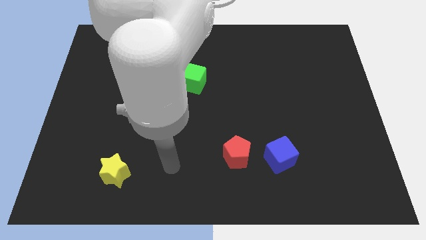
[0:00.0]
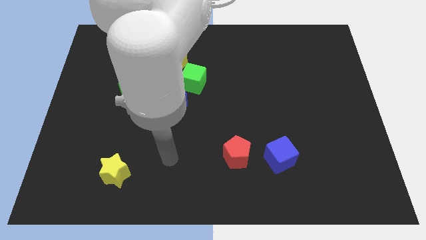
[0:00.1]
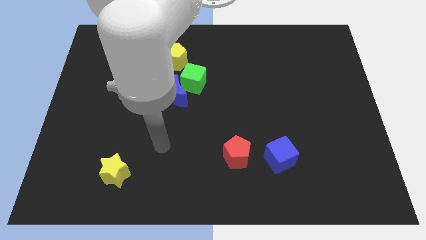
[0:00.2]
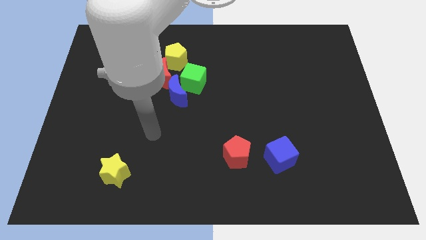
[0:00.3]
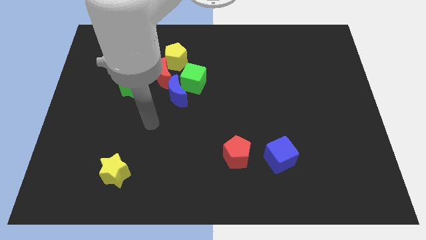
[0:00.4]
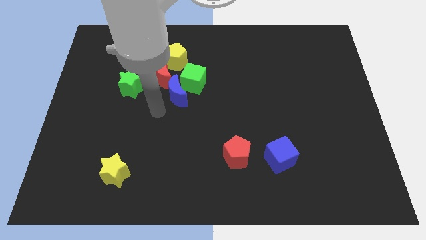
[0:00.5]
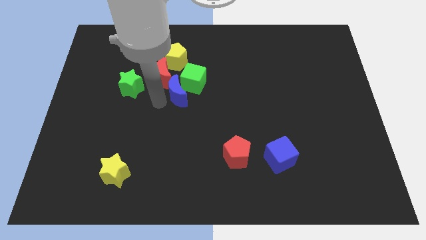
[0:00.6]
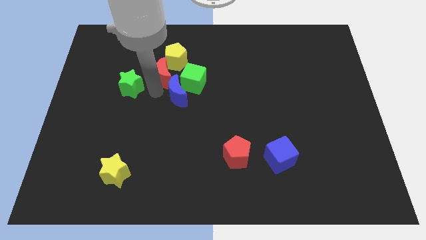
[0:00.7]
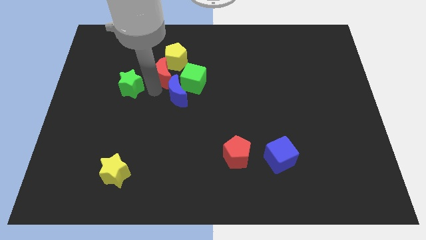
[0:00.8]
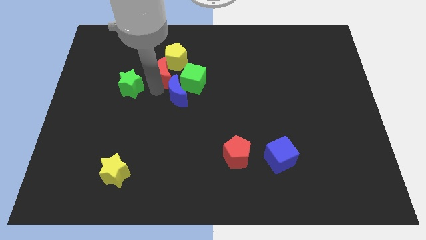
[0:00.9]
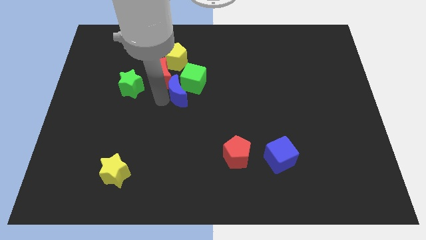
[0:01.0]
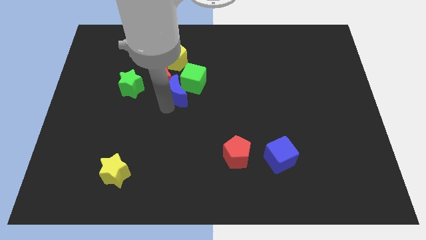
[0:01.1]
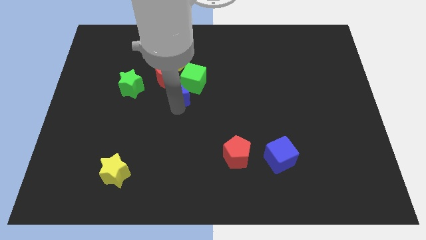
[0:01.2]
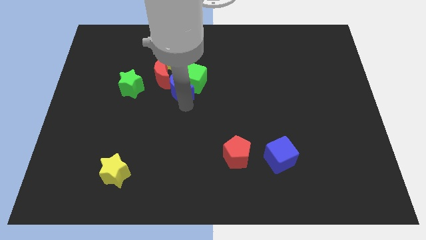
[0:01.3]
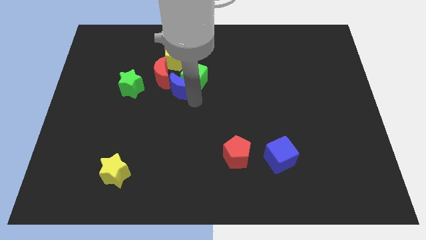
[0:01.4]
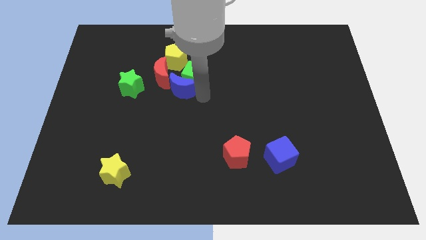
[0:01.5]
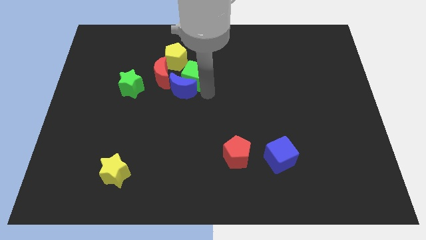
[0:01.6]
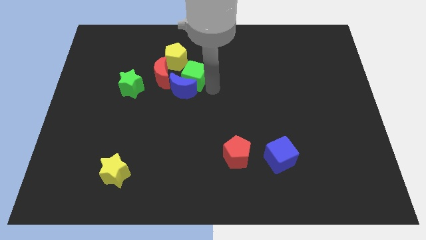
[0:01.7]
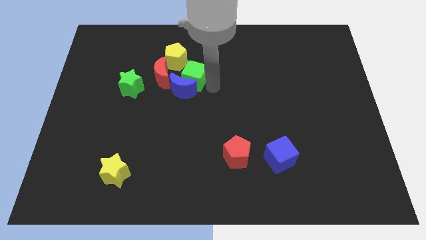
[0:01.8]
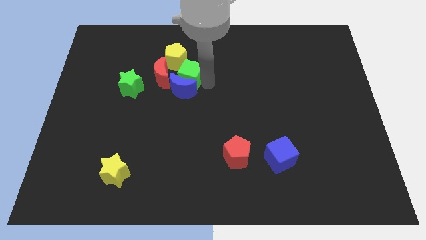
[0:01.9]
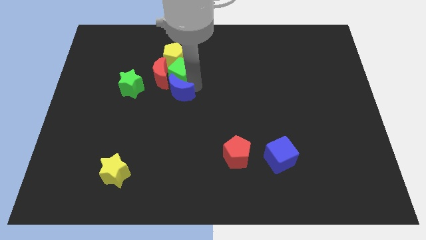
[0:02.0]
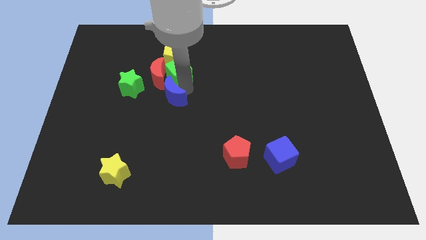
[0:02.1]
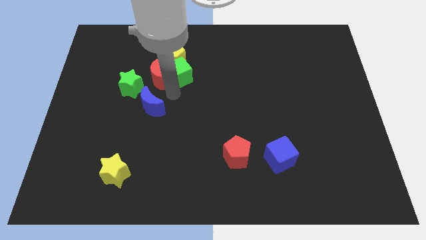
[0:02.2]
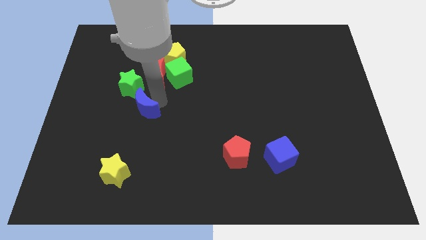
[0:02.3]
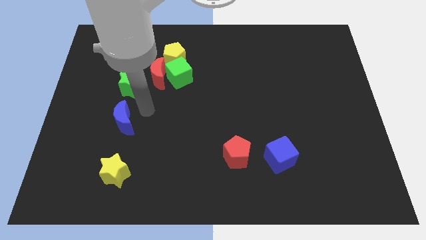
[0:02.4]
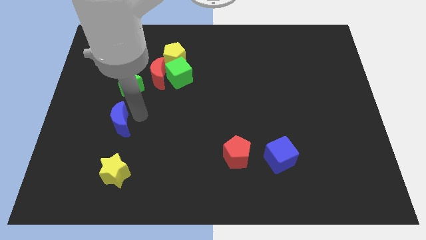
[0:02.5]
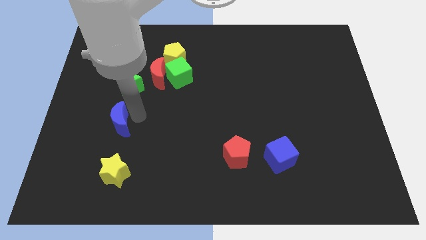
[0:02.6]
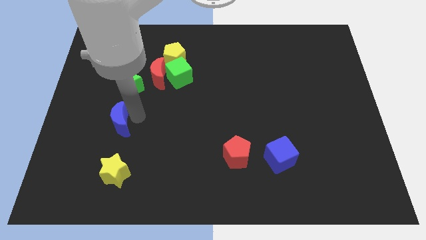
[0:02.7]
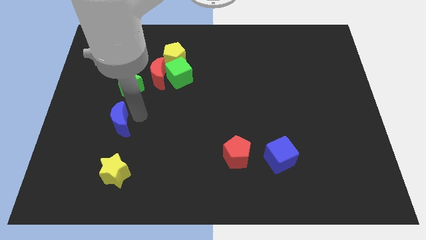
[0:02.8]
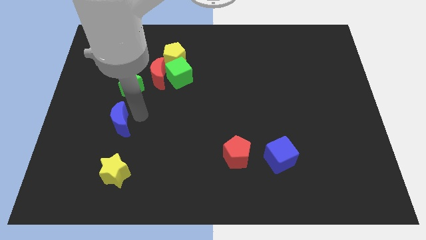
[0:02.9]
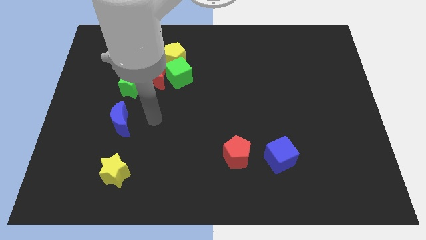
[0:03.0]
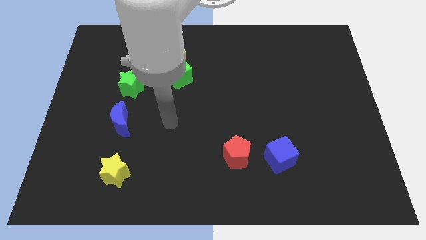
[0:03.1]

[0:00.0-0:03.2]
separate blue moon from group of blocks

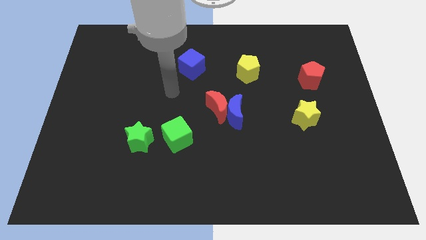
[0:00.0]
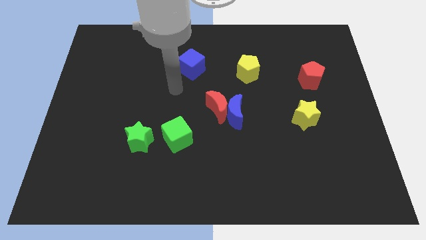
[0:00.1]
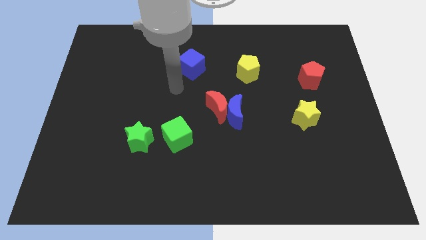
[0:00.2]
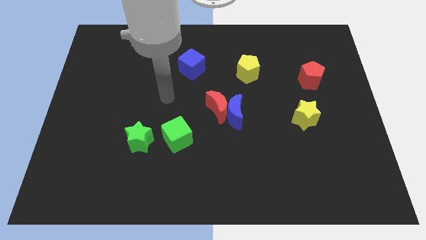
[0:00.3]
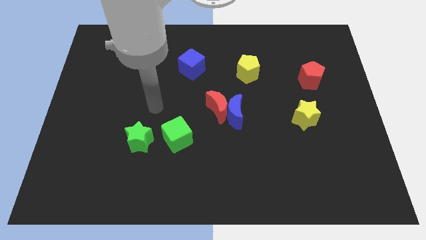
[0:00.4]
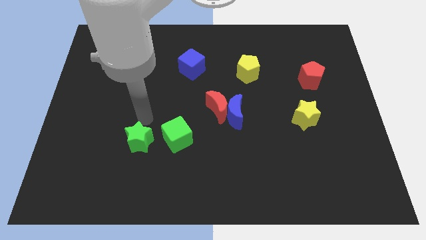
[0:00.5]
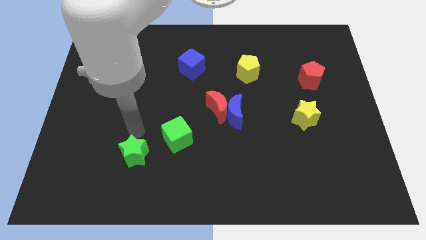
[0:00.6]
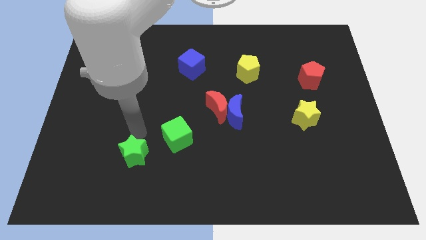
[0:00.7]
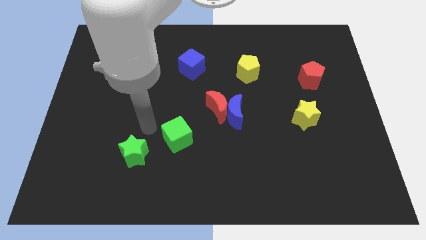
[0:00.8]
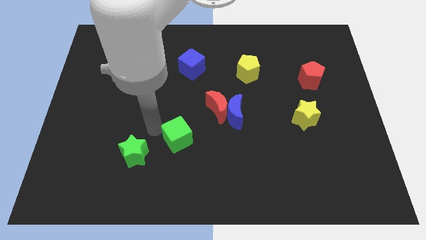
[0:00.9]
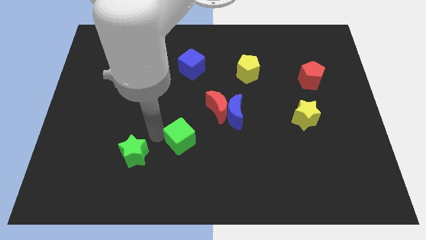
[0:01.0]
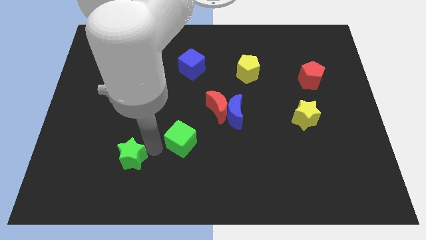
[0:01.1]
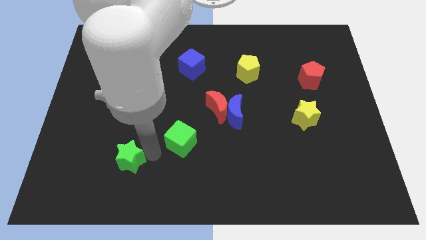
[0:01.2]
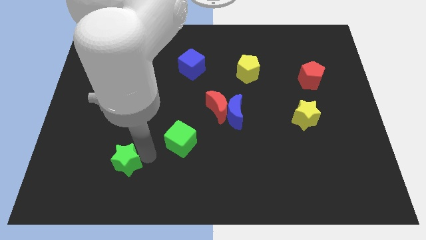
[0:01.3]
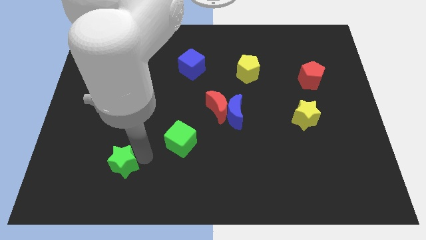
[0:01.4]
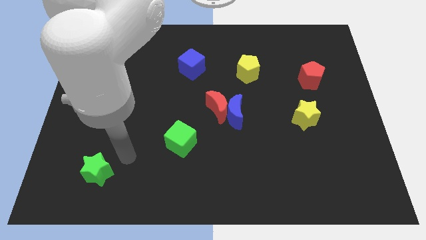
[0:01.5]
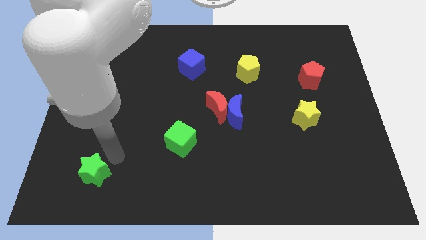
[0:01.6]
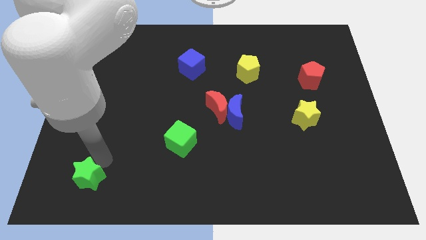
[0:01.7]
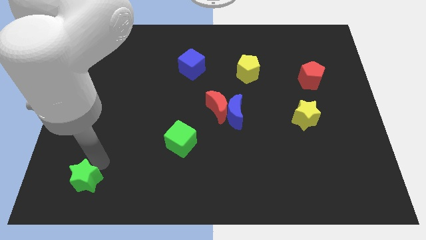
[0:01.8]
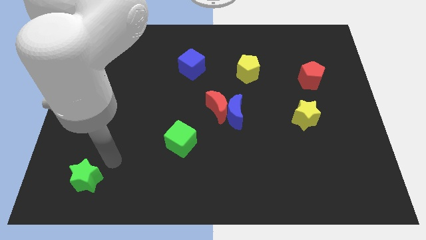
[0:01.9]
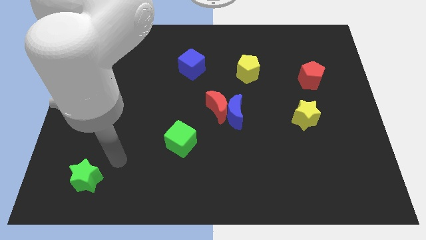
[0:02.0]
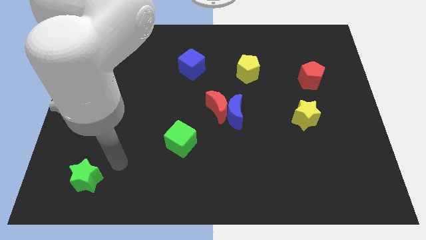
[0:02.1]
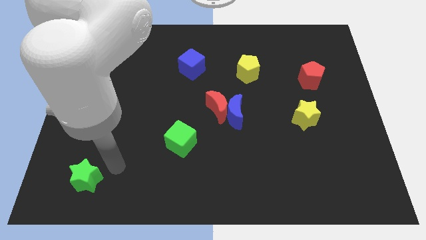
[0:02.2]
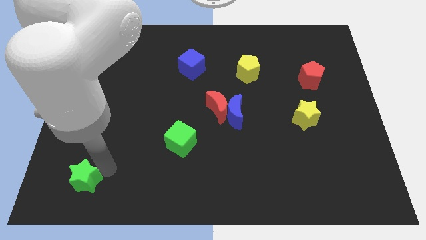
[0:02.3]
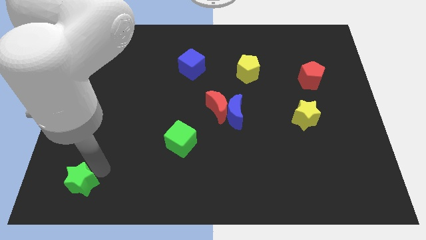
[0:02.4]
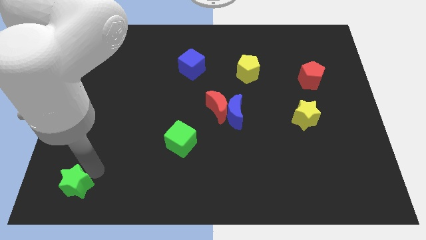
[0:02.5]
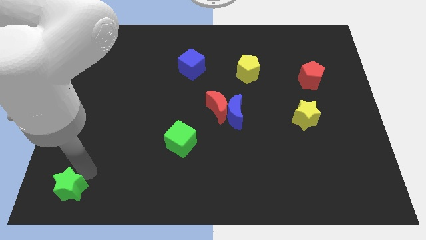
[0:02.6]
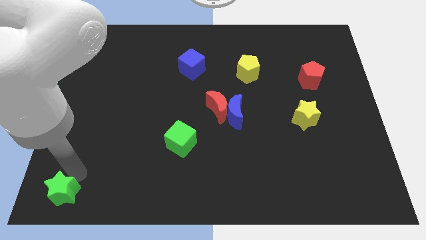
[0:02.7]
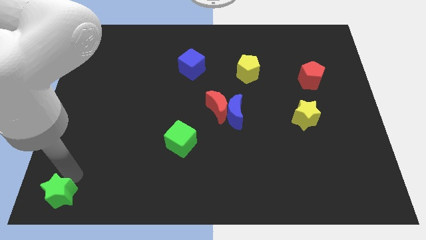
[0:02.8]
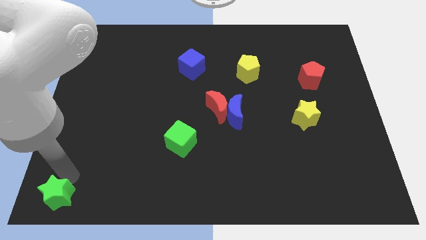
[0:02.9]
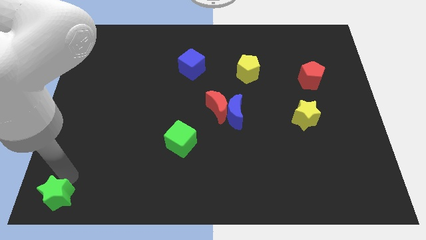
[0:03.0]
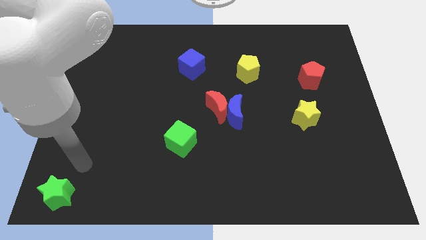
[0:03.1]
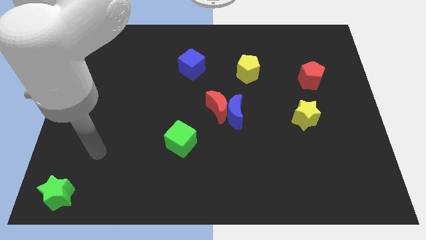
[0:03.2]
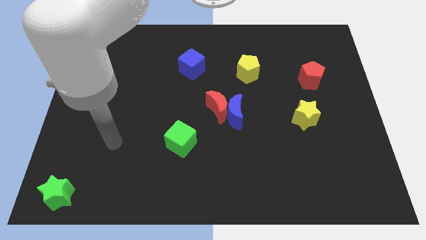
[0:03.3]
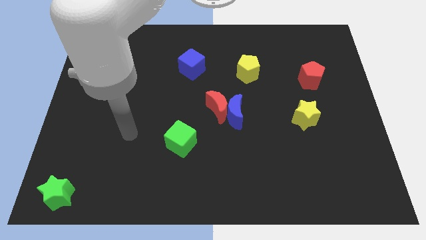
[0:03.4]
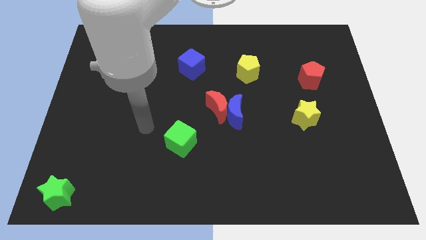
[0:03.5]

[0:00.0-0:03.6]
move the green star to the bottom left corner of the board

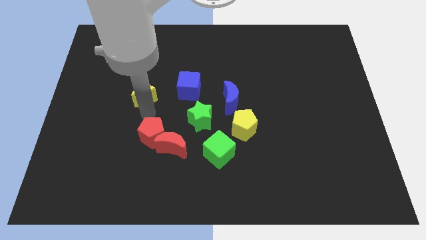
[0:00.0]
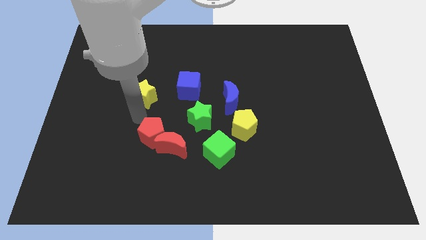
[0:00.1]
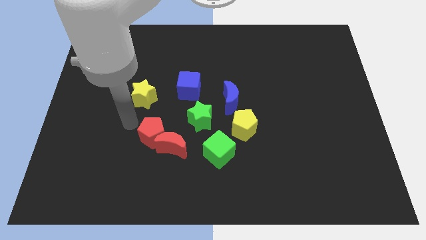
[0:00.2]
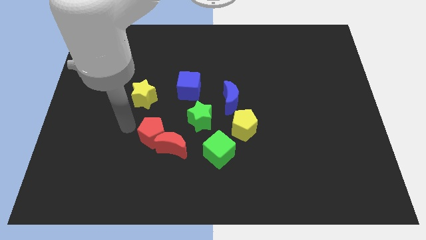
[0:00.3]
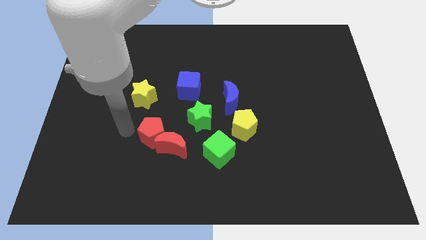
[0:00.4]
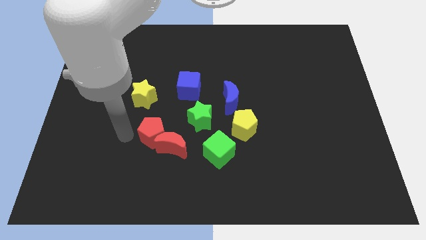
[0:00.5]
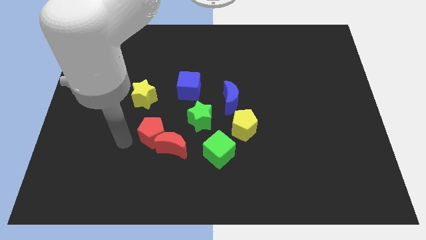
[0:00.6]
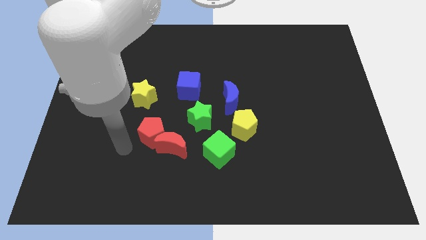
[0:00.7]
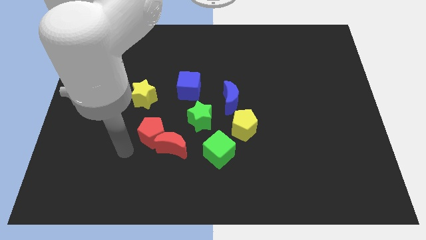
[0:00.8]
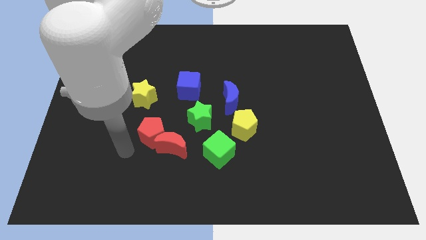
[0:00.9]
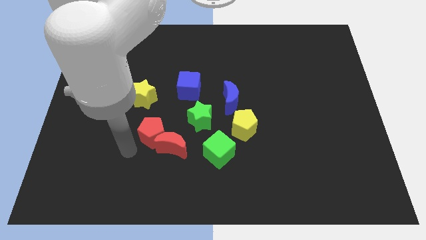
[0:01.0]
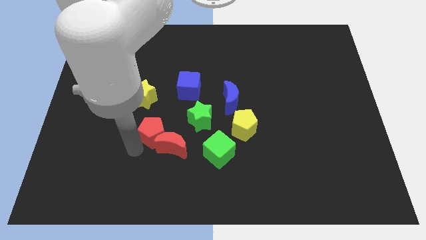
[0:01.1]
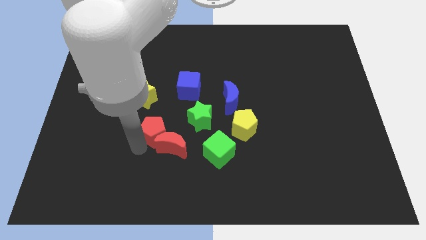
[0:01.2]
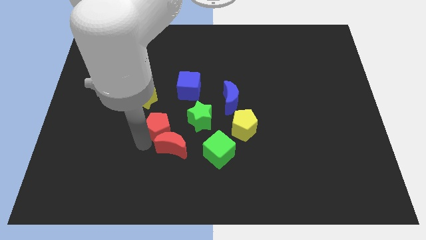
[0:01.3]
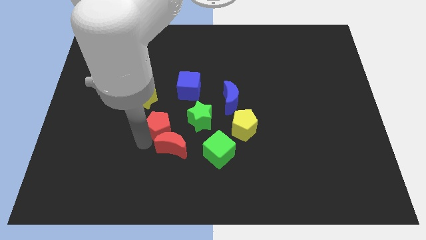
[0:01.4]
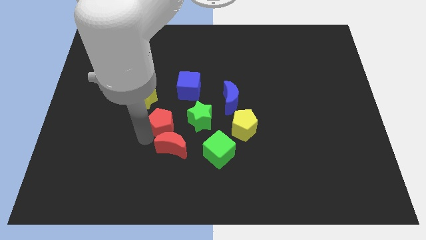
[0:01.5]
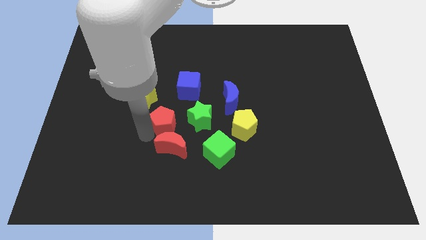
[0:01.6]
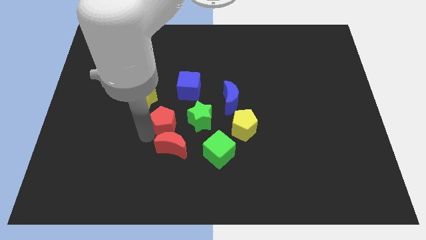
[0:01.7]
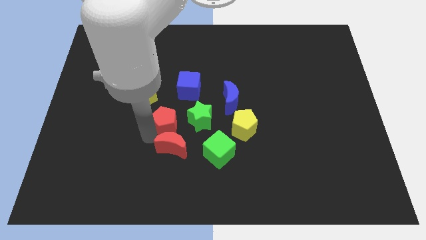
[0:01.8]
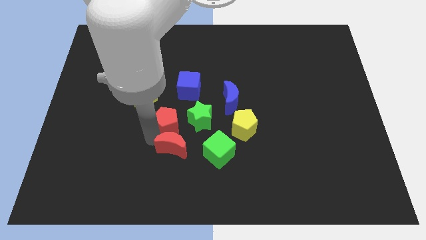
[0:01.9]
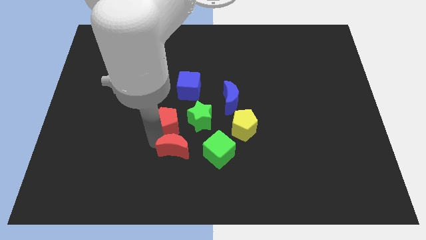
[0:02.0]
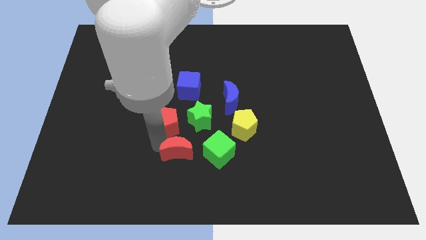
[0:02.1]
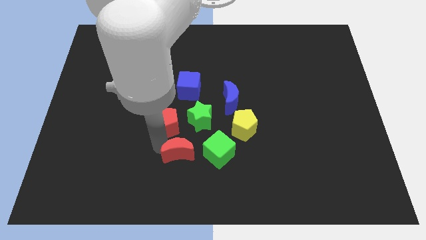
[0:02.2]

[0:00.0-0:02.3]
separate the red blocks
